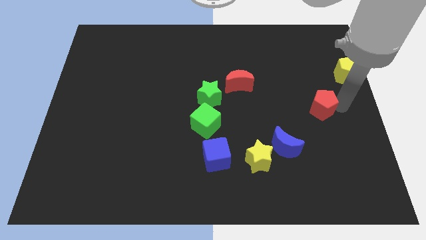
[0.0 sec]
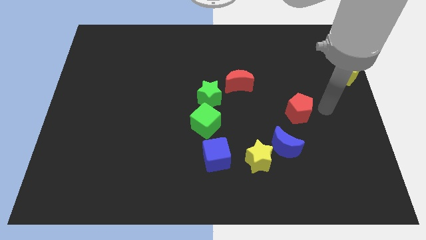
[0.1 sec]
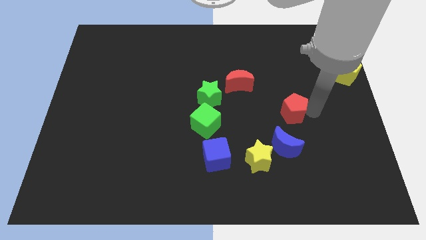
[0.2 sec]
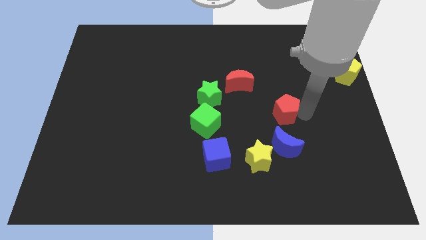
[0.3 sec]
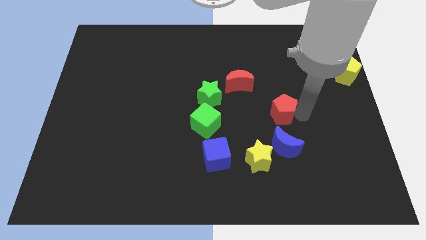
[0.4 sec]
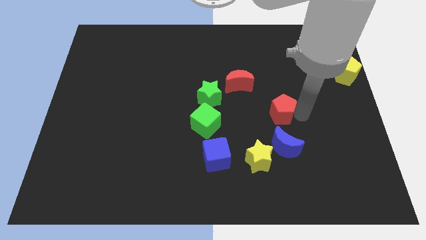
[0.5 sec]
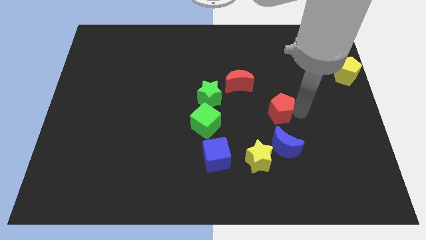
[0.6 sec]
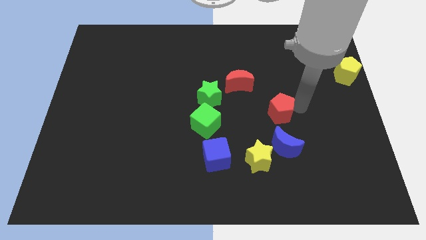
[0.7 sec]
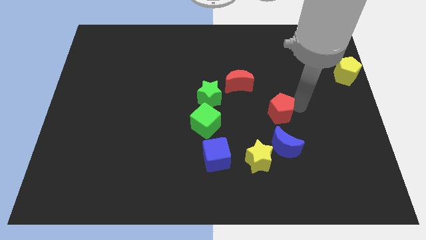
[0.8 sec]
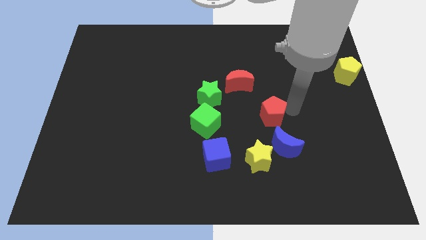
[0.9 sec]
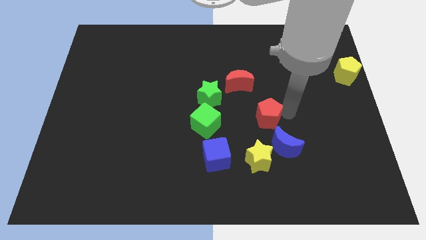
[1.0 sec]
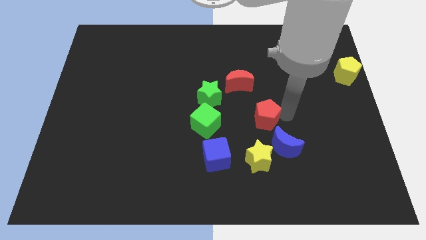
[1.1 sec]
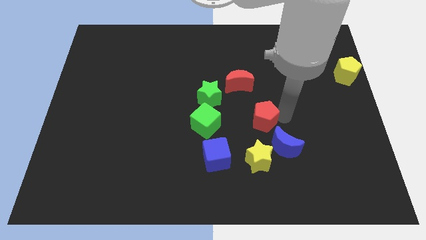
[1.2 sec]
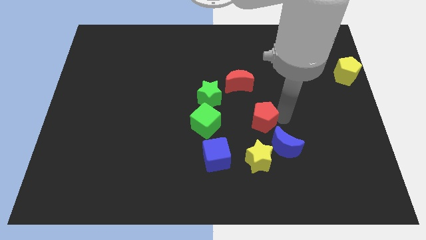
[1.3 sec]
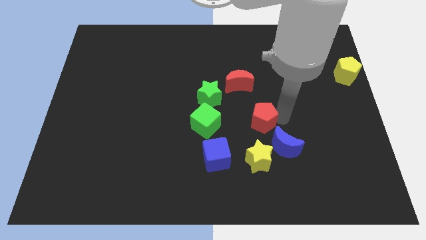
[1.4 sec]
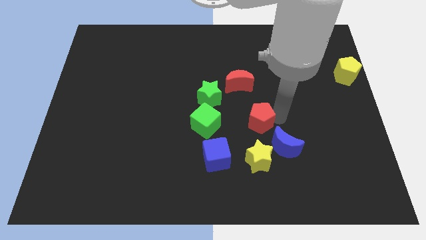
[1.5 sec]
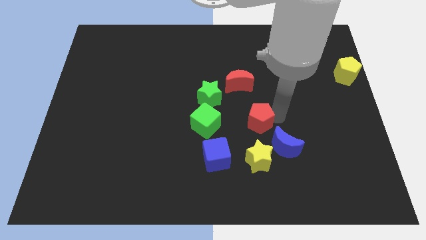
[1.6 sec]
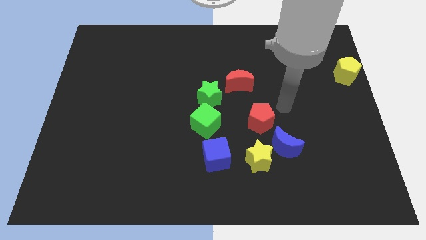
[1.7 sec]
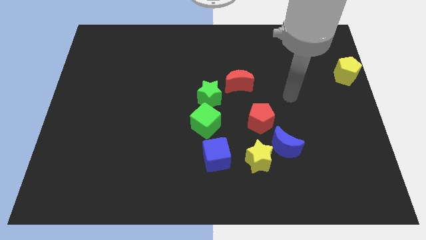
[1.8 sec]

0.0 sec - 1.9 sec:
move the red pentagon parallel to the green cube

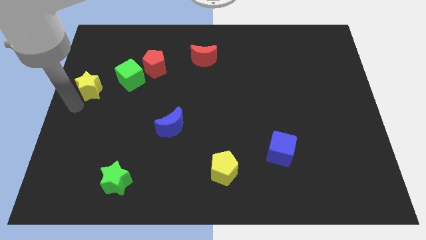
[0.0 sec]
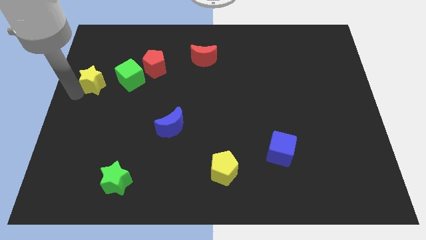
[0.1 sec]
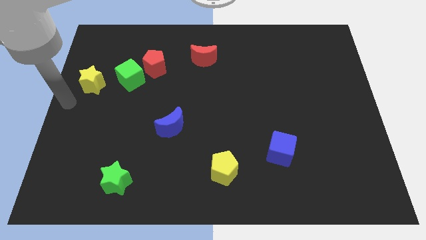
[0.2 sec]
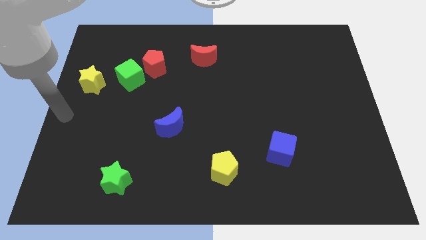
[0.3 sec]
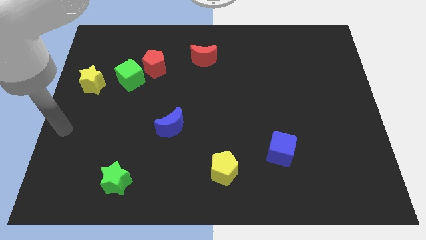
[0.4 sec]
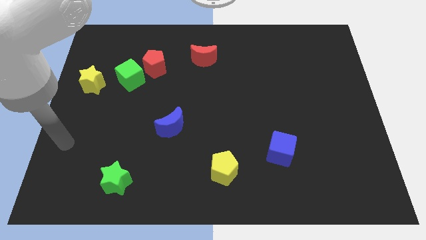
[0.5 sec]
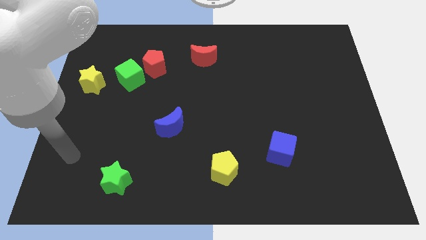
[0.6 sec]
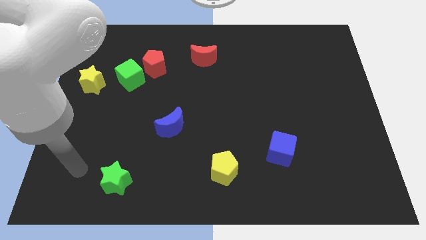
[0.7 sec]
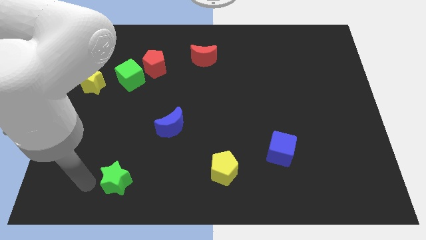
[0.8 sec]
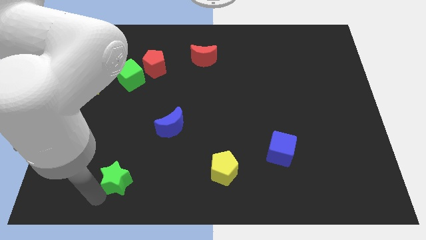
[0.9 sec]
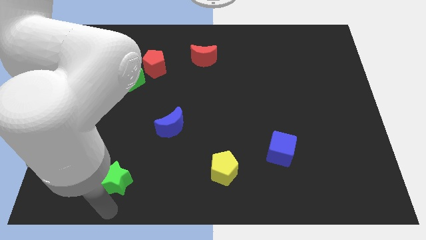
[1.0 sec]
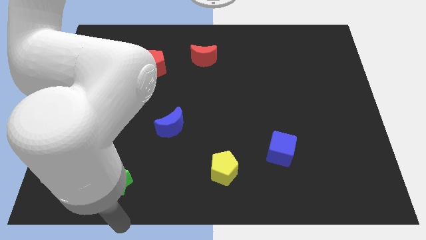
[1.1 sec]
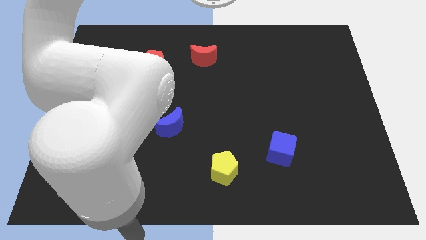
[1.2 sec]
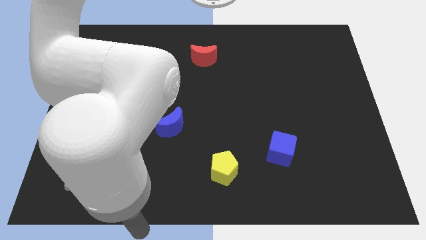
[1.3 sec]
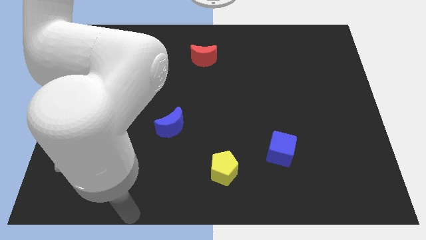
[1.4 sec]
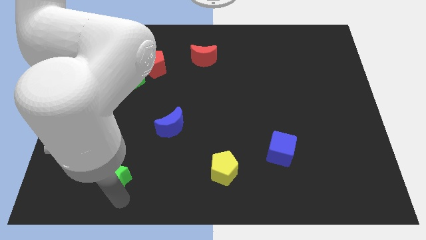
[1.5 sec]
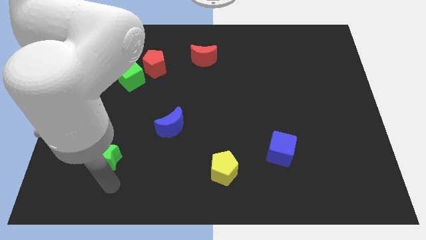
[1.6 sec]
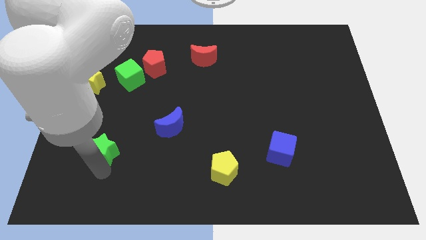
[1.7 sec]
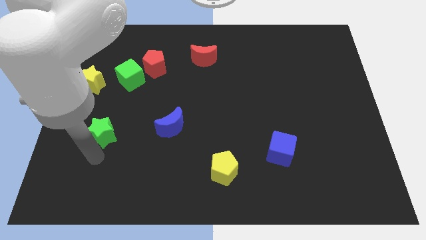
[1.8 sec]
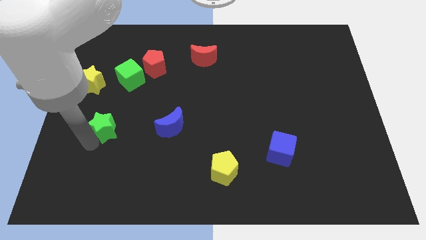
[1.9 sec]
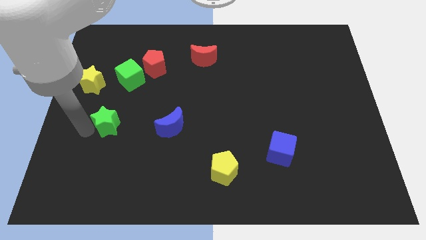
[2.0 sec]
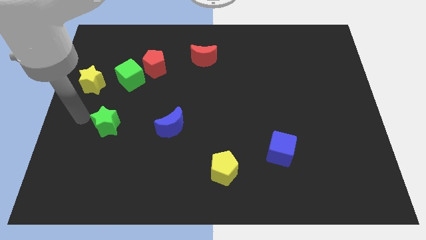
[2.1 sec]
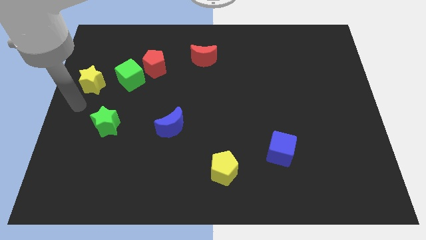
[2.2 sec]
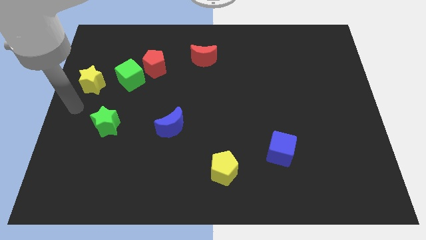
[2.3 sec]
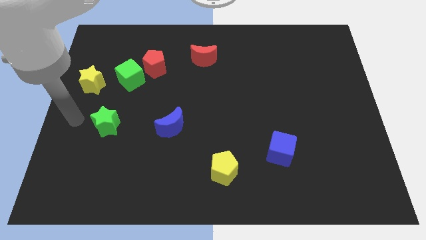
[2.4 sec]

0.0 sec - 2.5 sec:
push the green star diagonally to the yellow star

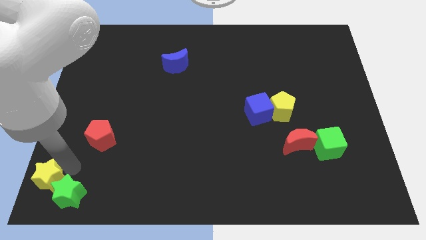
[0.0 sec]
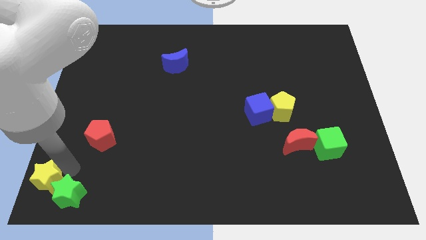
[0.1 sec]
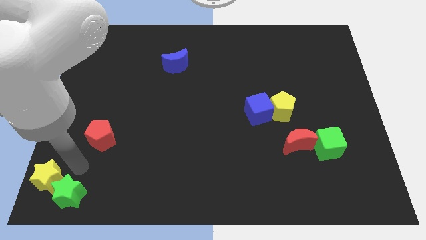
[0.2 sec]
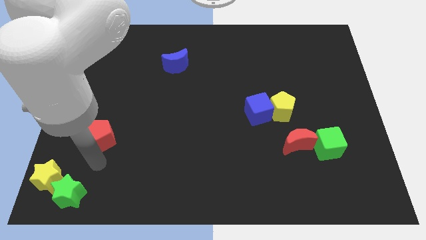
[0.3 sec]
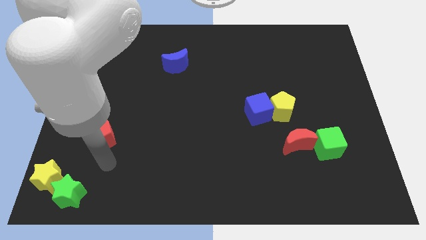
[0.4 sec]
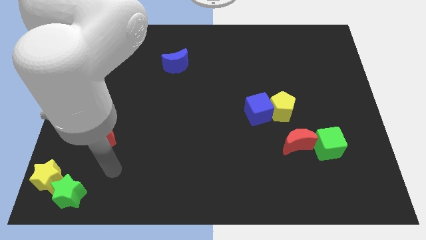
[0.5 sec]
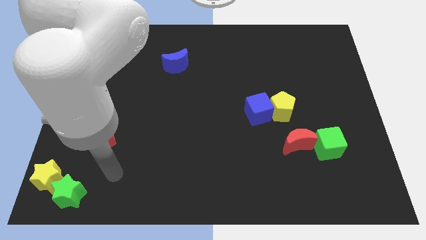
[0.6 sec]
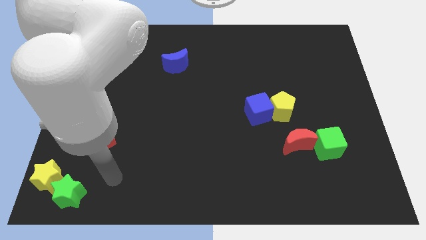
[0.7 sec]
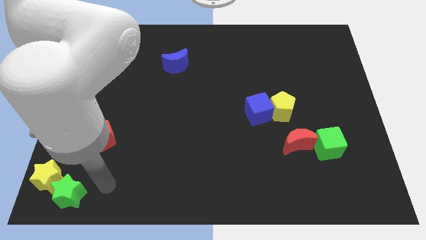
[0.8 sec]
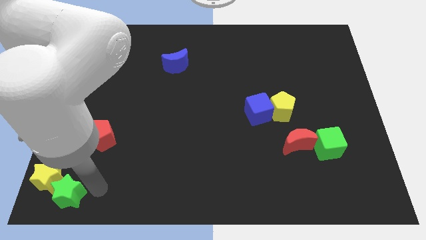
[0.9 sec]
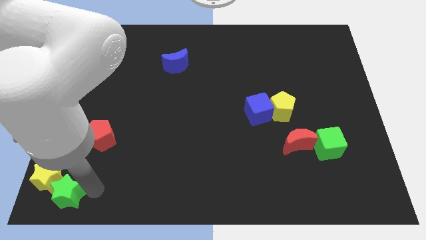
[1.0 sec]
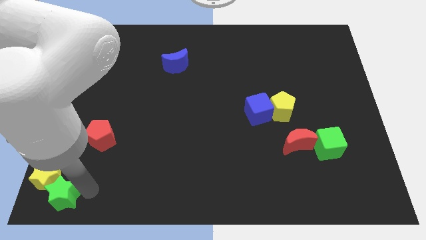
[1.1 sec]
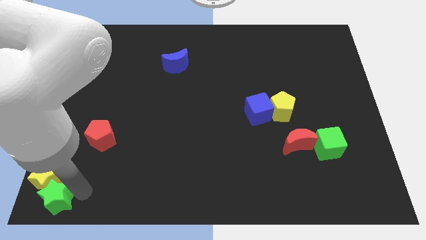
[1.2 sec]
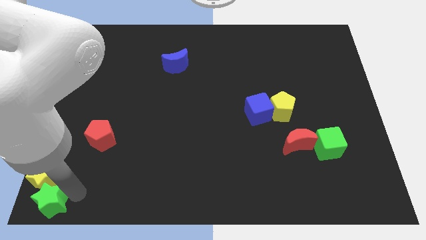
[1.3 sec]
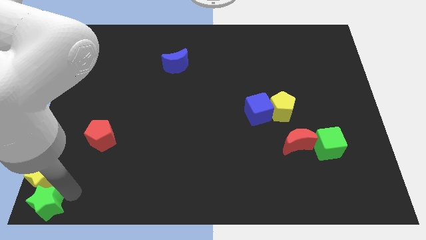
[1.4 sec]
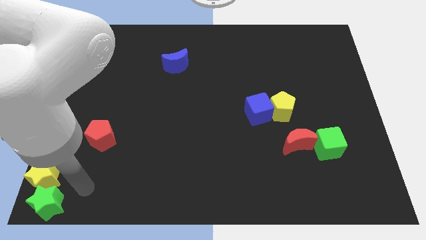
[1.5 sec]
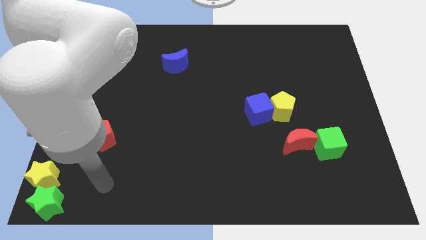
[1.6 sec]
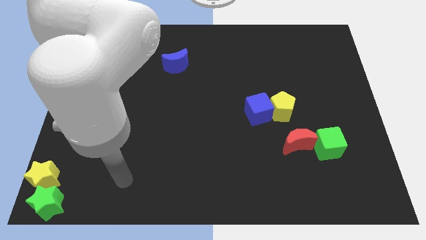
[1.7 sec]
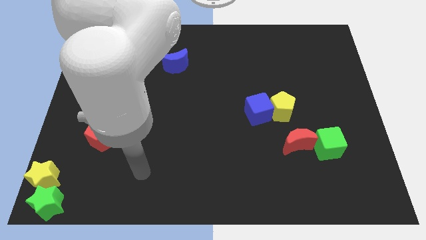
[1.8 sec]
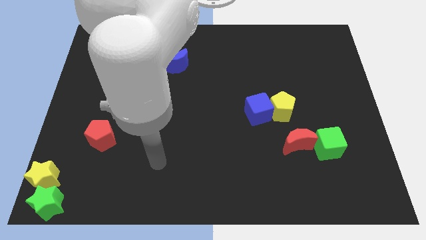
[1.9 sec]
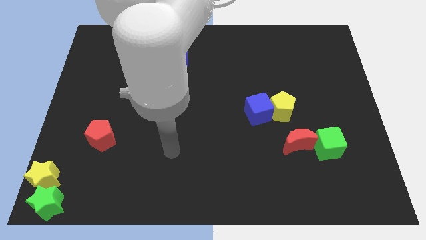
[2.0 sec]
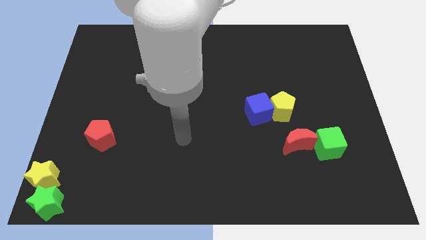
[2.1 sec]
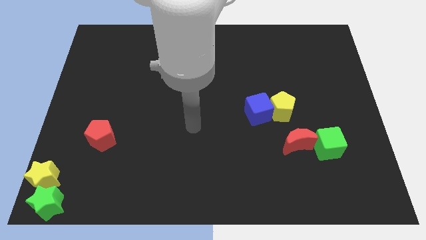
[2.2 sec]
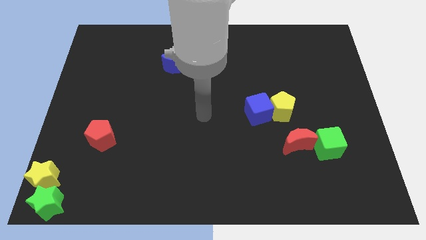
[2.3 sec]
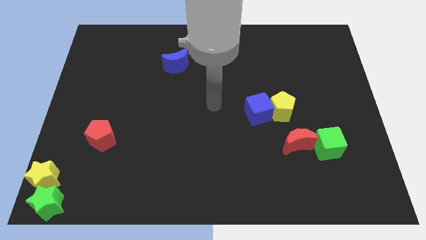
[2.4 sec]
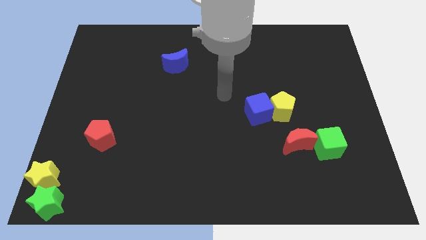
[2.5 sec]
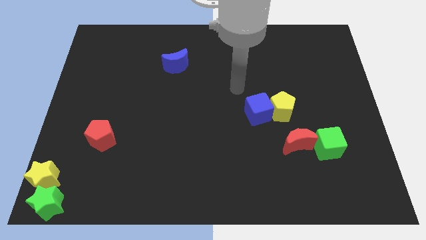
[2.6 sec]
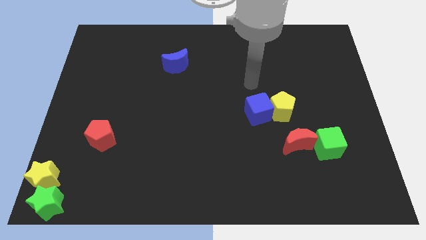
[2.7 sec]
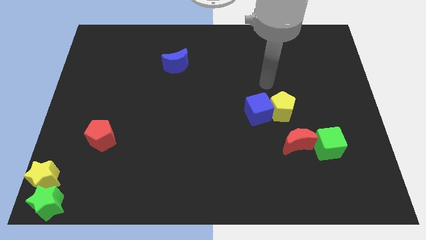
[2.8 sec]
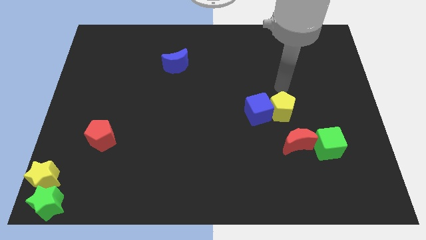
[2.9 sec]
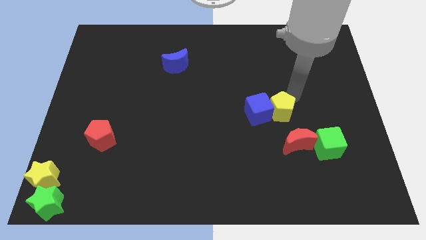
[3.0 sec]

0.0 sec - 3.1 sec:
move the green star to the botttom of the yellow star

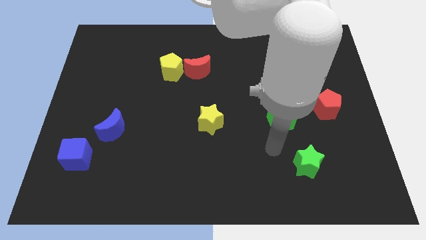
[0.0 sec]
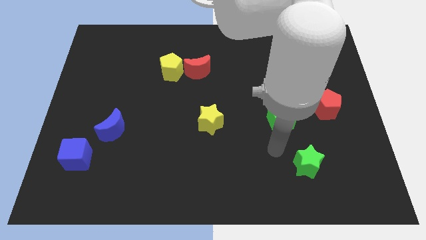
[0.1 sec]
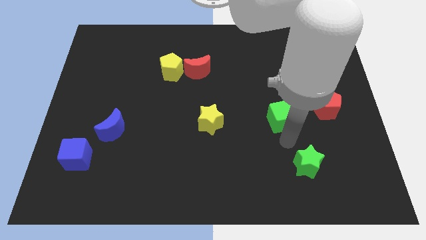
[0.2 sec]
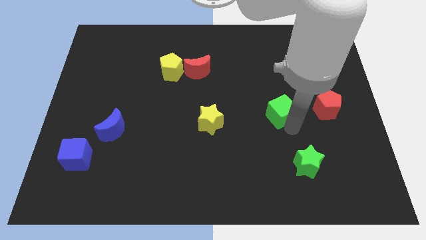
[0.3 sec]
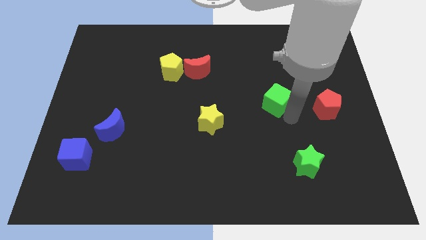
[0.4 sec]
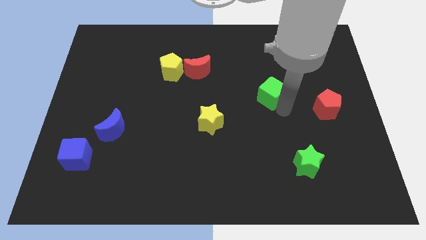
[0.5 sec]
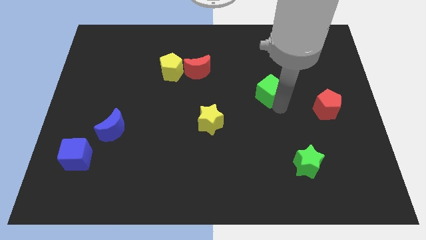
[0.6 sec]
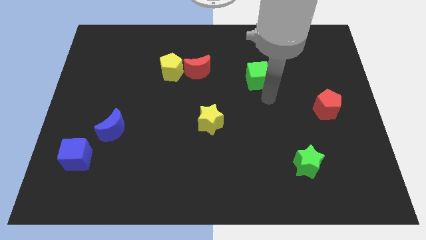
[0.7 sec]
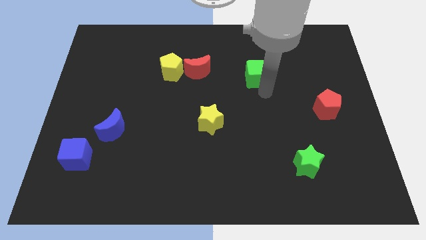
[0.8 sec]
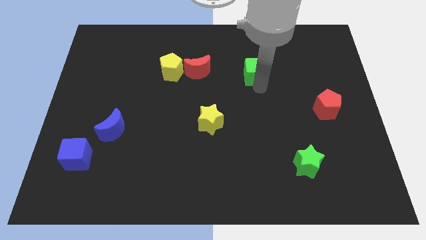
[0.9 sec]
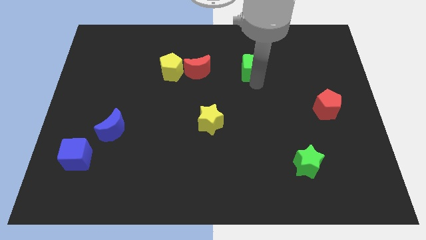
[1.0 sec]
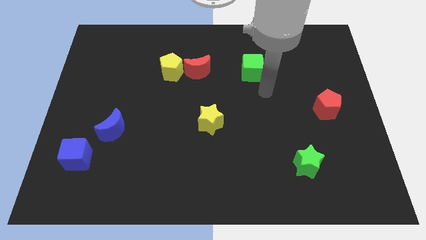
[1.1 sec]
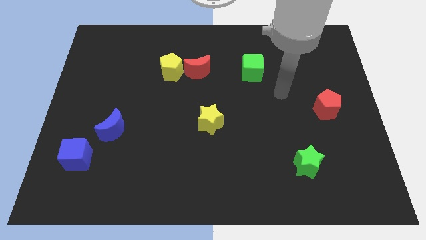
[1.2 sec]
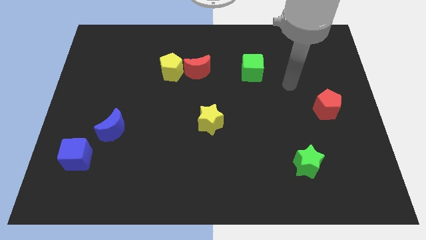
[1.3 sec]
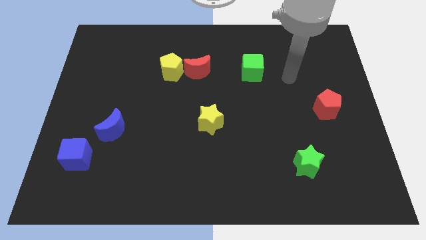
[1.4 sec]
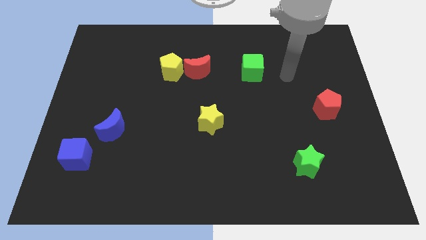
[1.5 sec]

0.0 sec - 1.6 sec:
move the blue cube slightly upwards
